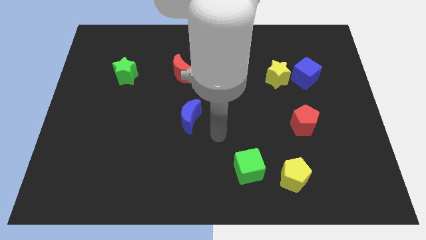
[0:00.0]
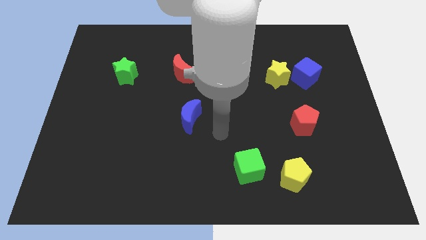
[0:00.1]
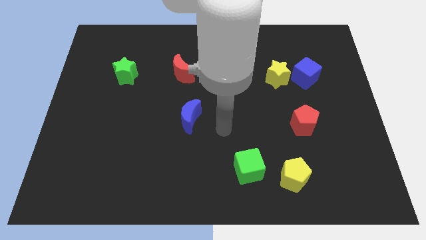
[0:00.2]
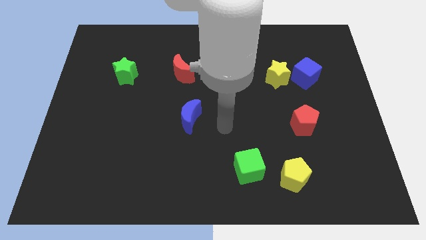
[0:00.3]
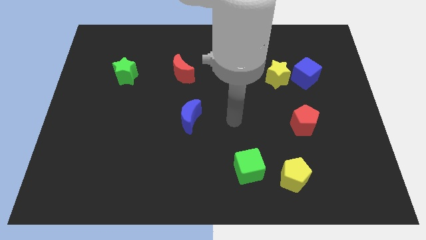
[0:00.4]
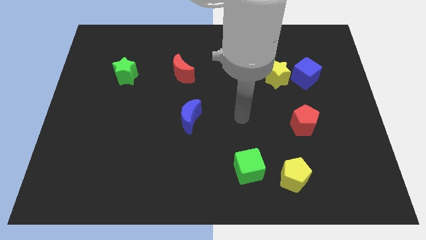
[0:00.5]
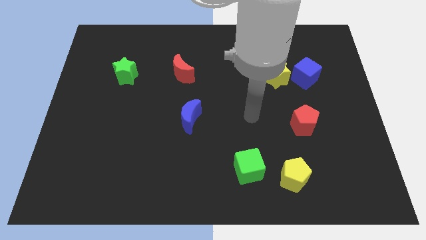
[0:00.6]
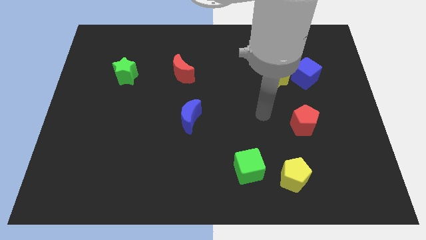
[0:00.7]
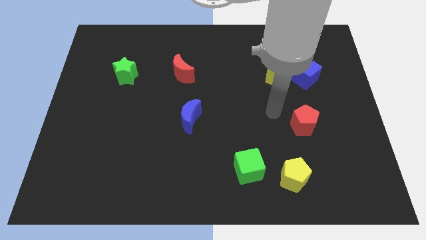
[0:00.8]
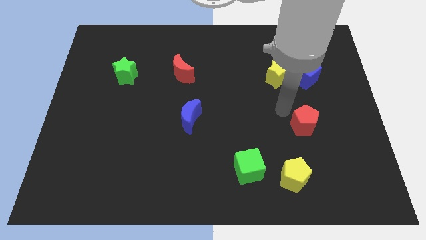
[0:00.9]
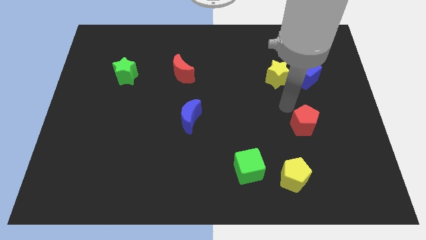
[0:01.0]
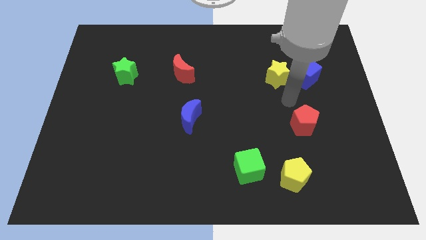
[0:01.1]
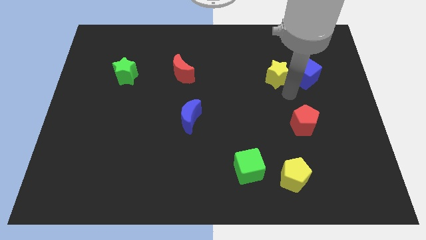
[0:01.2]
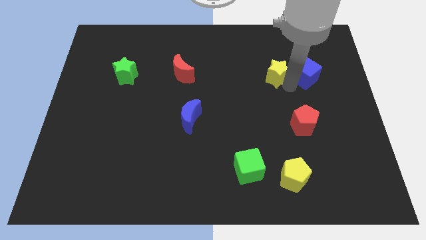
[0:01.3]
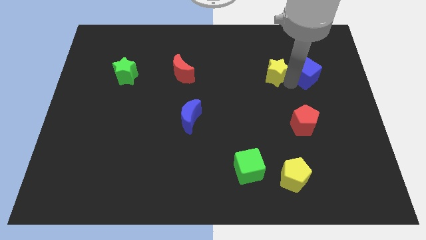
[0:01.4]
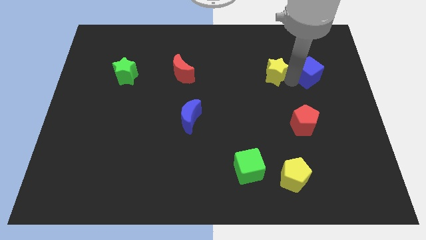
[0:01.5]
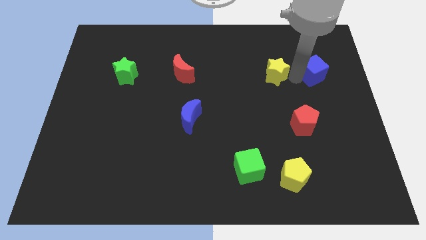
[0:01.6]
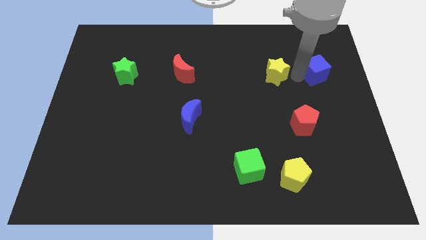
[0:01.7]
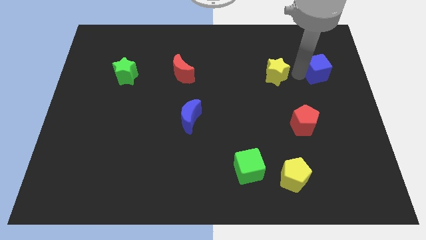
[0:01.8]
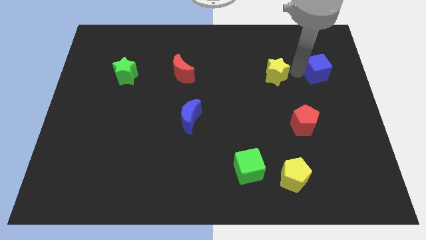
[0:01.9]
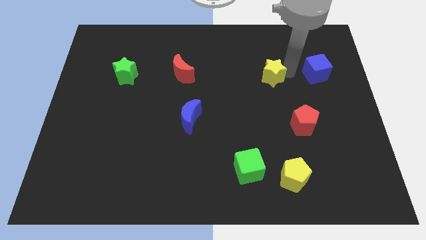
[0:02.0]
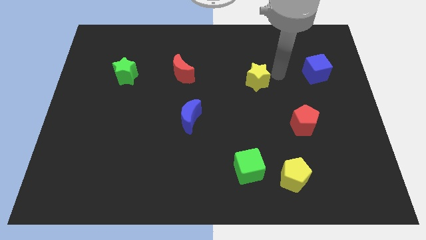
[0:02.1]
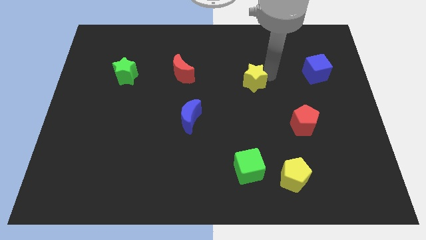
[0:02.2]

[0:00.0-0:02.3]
separate the yellow star away from the blue cube

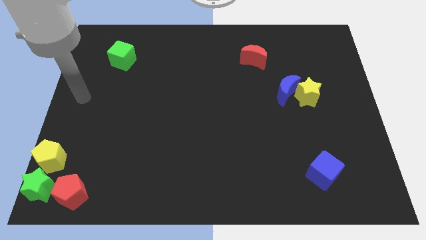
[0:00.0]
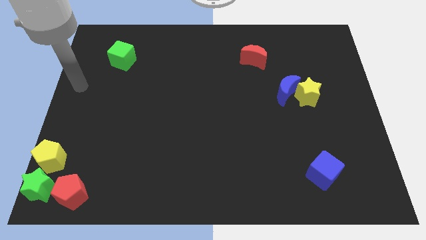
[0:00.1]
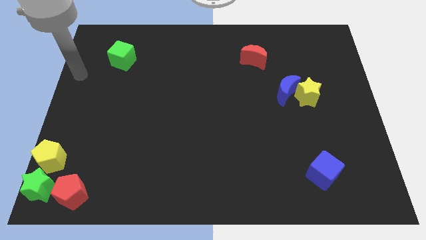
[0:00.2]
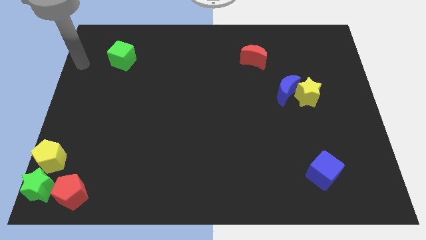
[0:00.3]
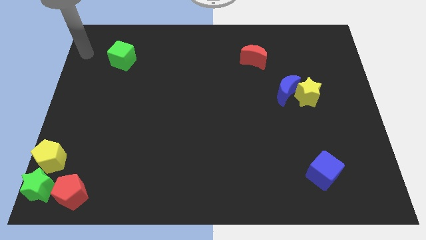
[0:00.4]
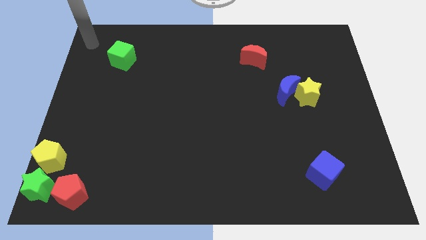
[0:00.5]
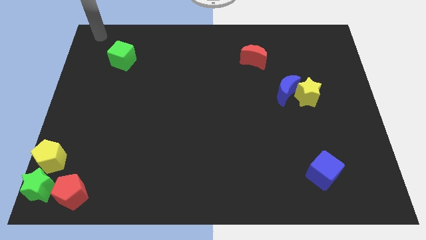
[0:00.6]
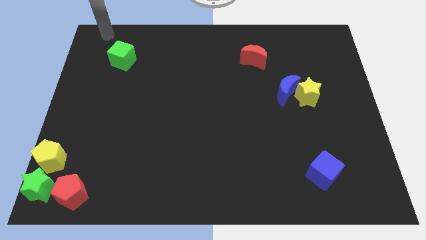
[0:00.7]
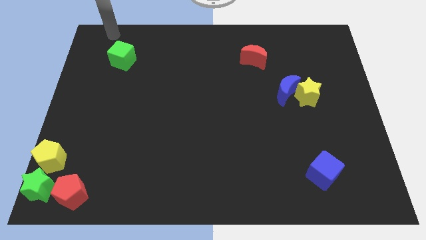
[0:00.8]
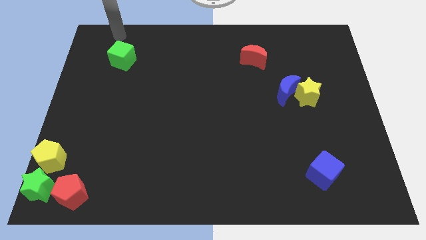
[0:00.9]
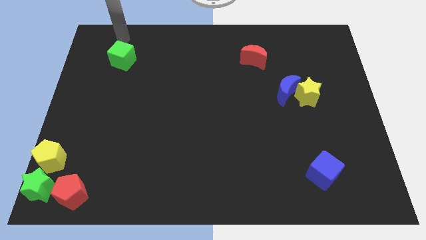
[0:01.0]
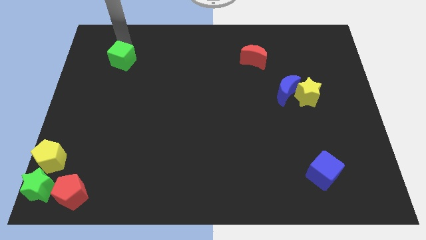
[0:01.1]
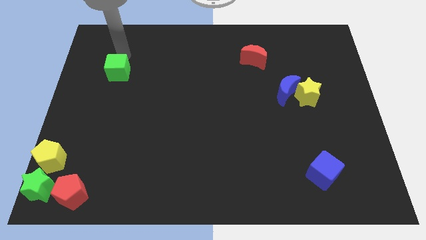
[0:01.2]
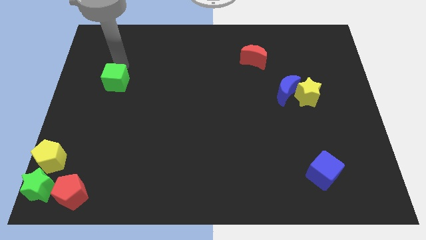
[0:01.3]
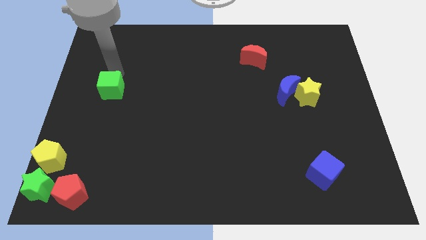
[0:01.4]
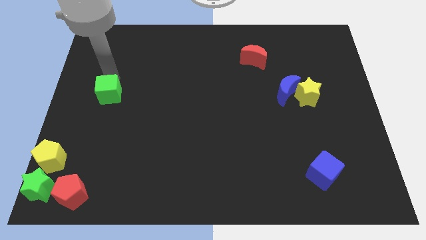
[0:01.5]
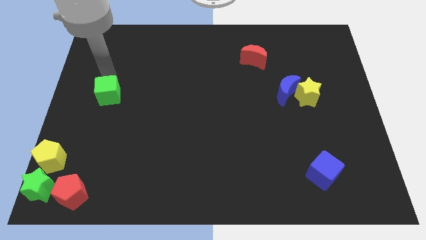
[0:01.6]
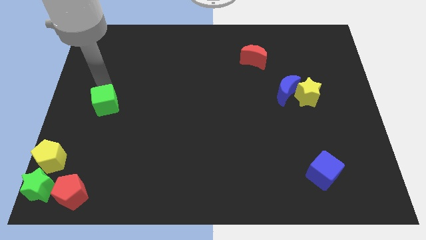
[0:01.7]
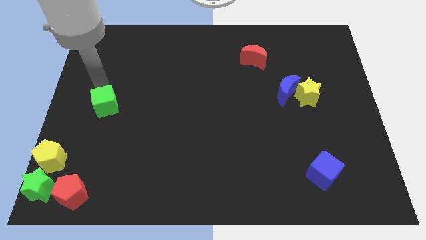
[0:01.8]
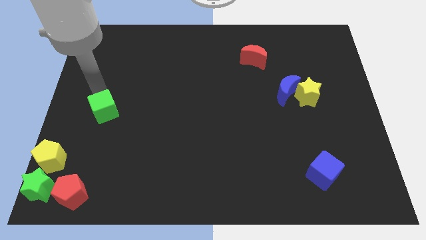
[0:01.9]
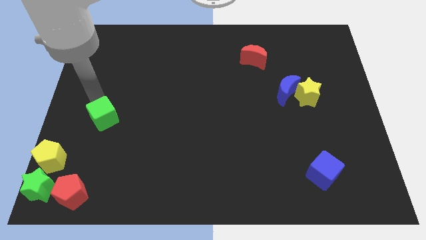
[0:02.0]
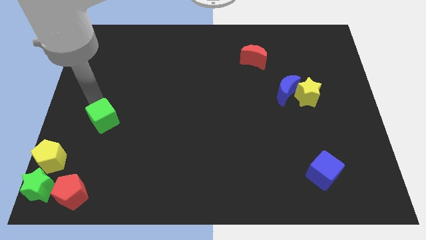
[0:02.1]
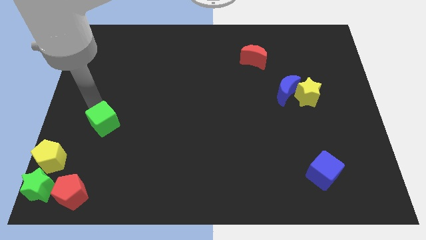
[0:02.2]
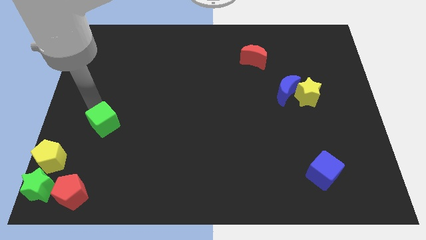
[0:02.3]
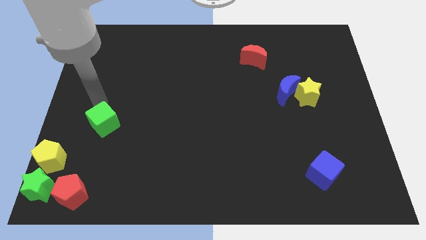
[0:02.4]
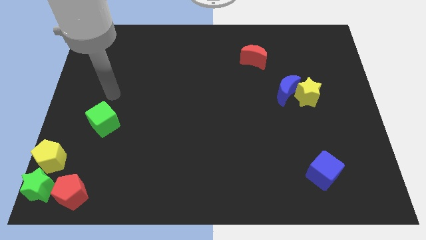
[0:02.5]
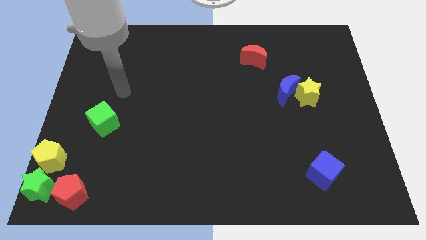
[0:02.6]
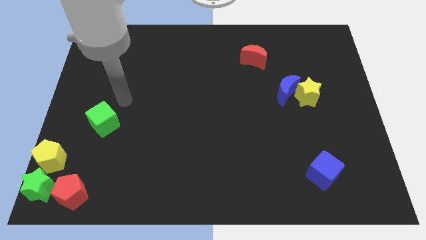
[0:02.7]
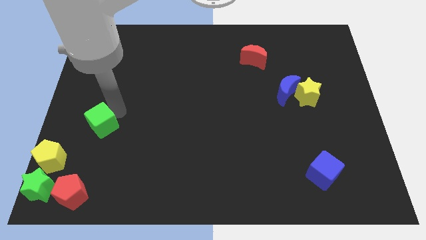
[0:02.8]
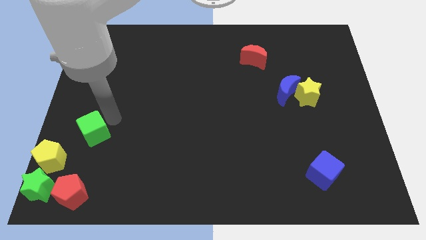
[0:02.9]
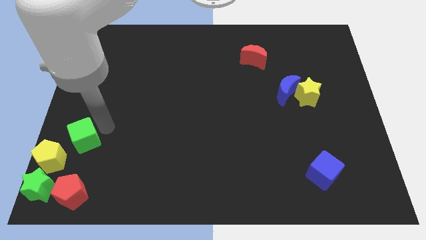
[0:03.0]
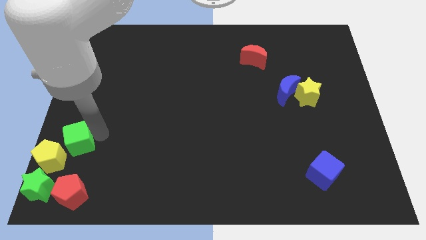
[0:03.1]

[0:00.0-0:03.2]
place the green cube diagonally to the yellow pentagon

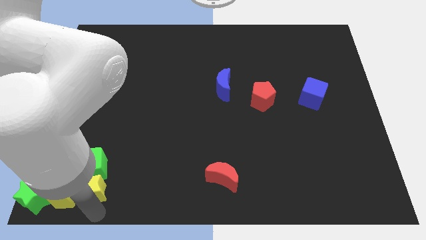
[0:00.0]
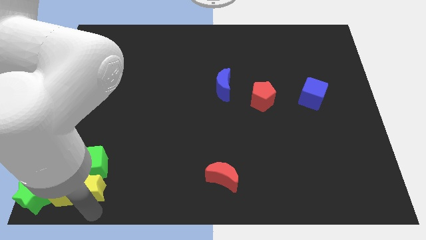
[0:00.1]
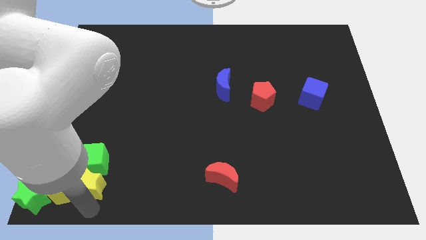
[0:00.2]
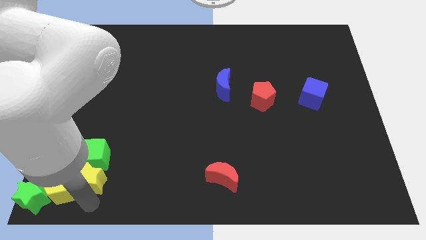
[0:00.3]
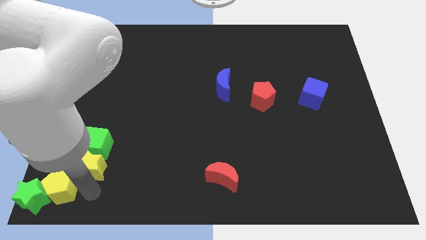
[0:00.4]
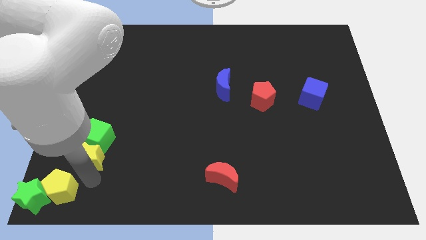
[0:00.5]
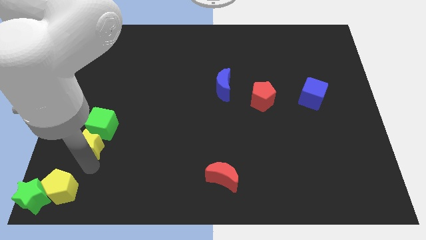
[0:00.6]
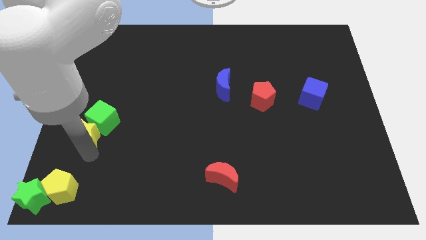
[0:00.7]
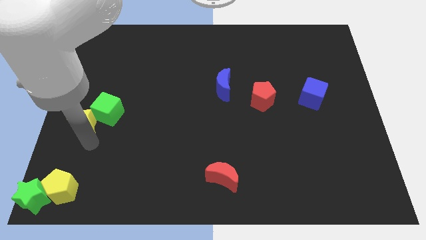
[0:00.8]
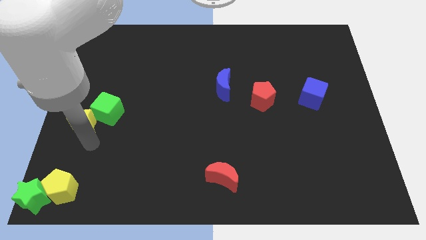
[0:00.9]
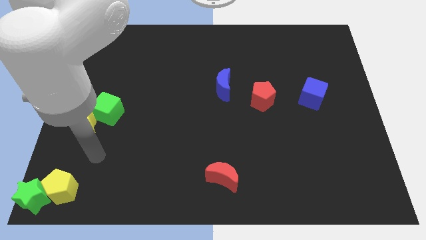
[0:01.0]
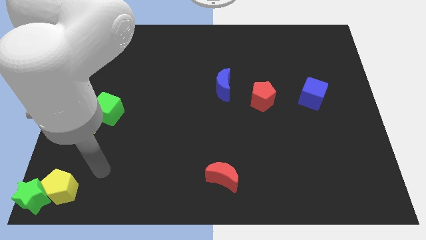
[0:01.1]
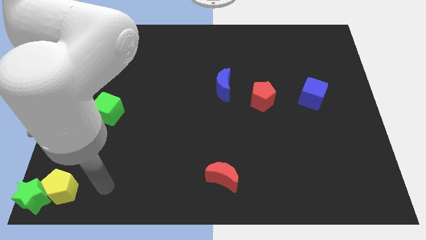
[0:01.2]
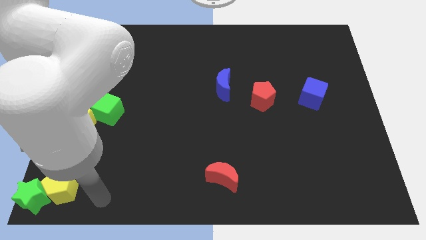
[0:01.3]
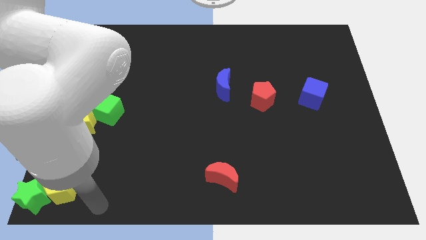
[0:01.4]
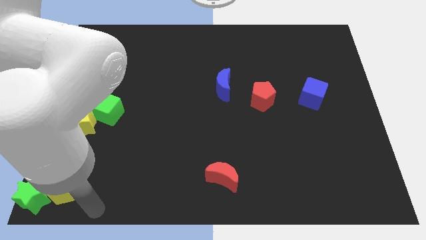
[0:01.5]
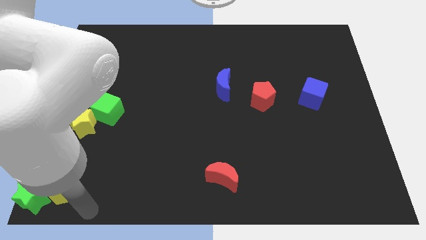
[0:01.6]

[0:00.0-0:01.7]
slide the yellow star towards the left center of the board

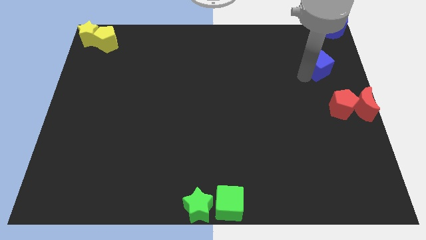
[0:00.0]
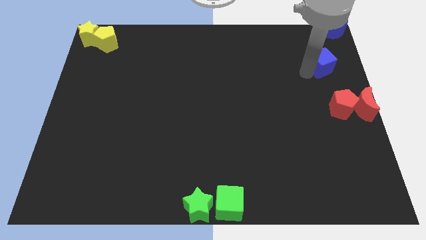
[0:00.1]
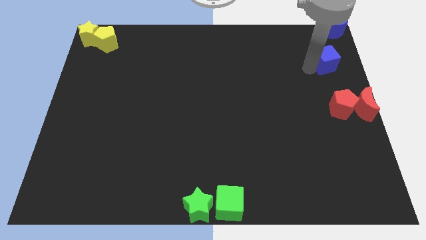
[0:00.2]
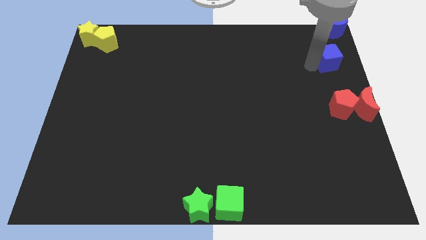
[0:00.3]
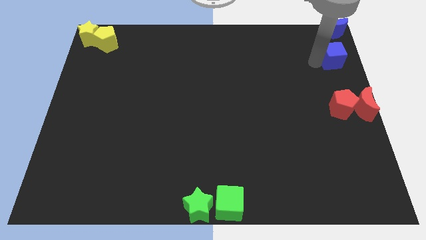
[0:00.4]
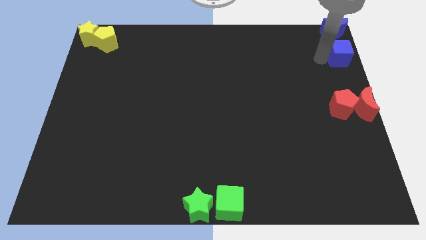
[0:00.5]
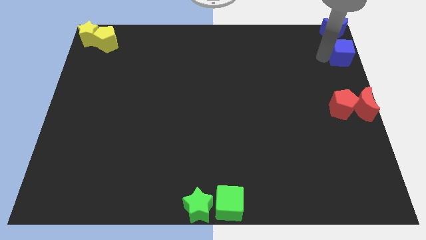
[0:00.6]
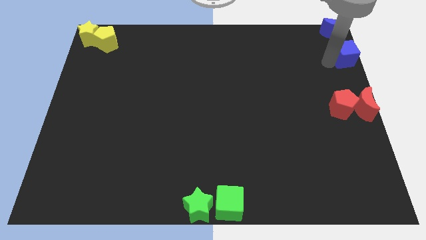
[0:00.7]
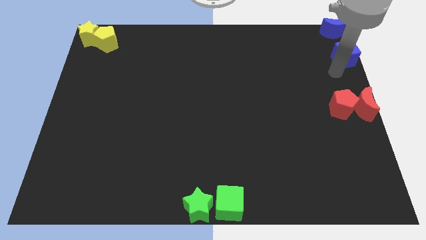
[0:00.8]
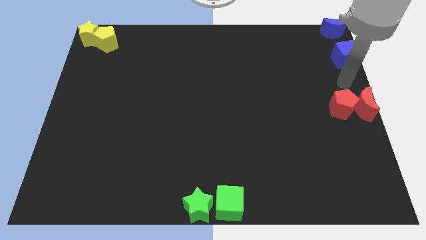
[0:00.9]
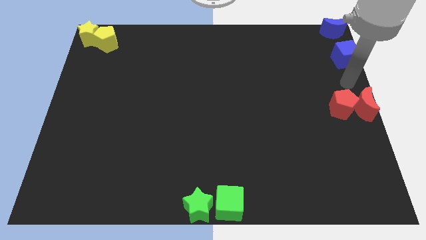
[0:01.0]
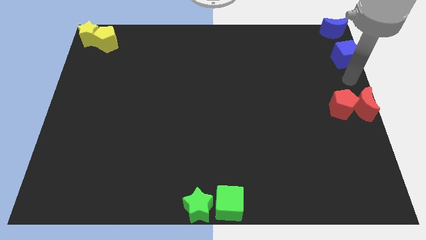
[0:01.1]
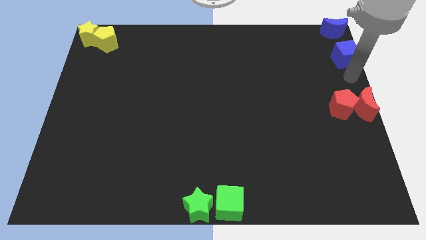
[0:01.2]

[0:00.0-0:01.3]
move the blue cube below the blue crescent

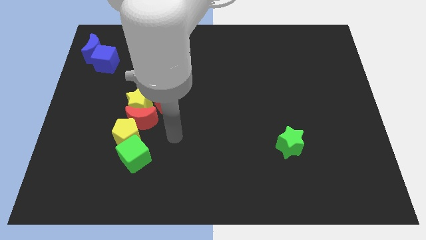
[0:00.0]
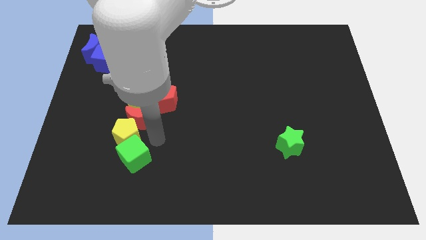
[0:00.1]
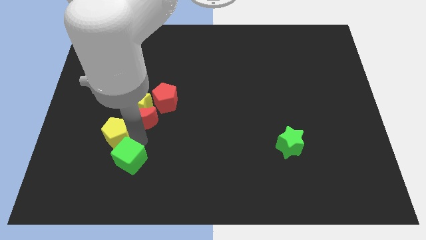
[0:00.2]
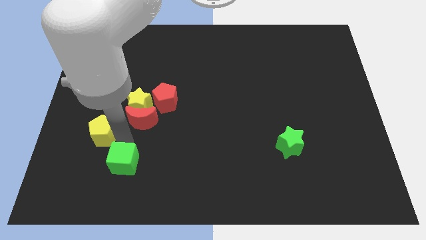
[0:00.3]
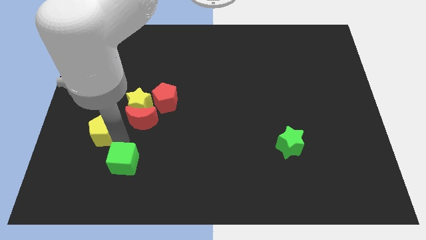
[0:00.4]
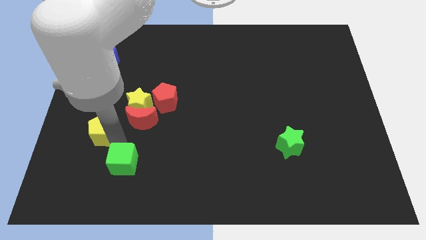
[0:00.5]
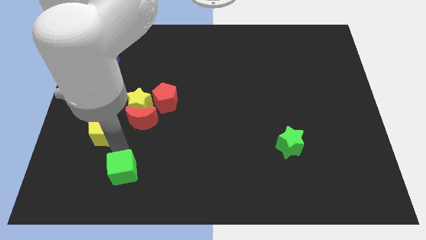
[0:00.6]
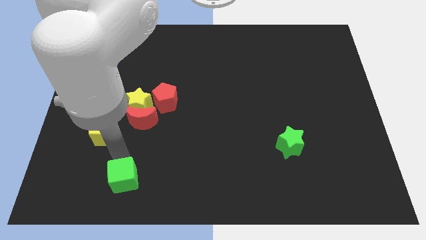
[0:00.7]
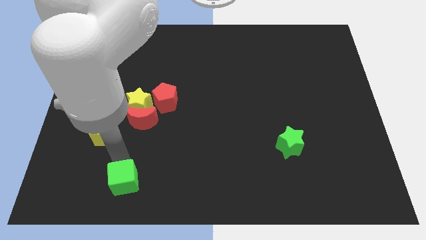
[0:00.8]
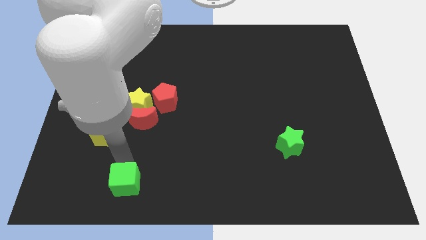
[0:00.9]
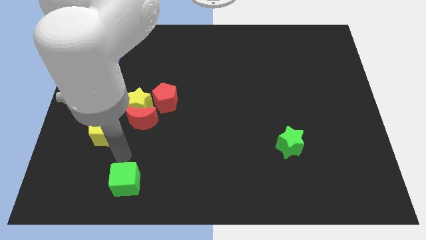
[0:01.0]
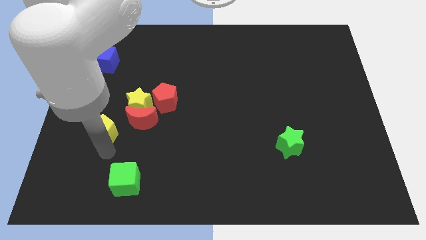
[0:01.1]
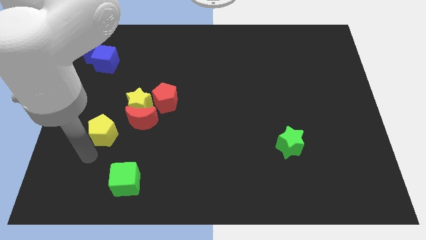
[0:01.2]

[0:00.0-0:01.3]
separate the green cube from the yellow pentagon
